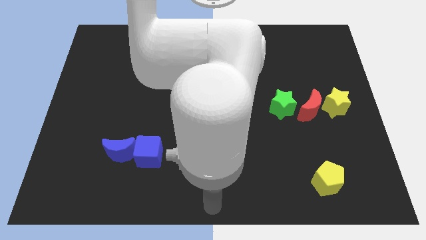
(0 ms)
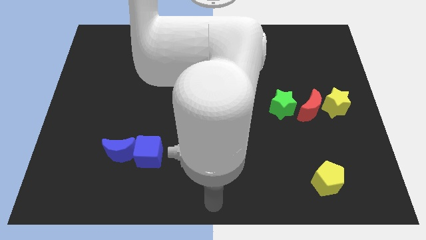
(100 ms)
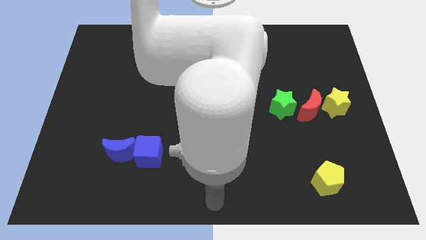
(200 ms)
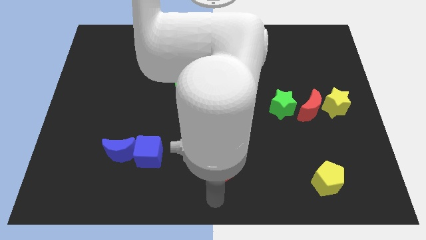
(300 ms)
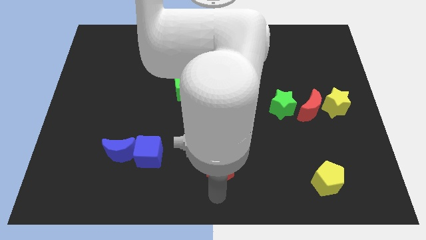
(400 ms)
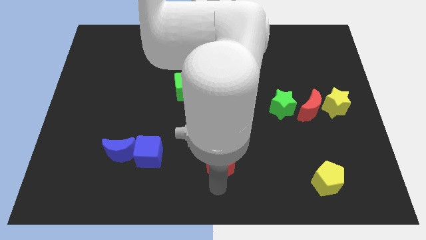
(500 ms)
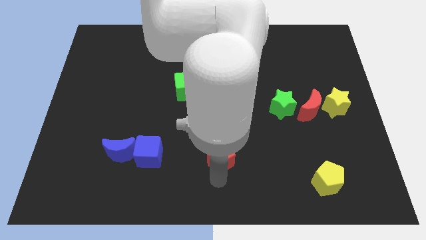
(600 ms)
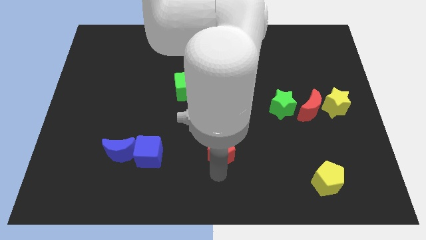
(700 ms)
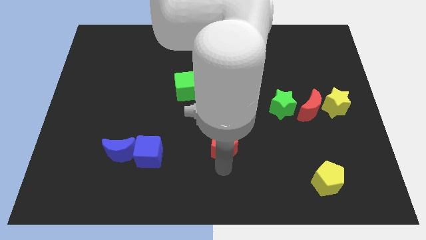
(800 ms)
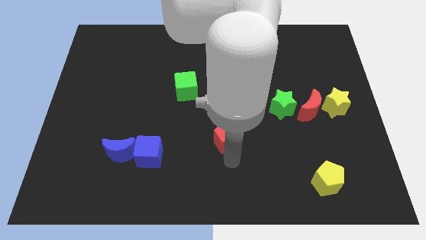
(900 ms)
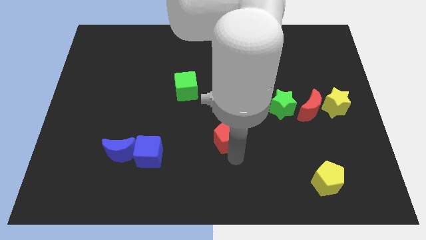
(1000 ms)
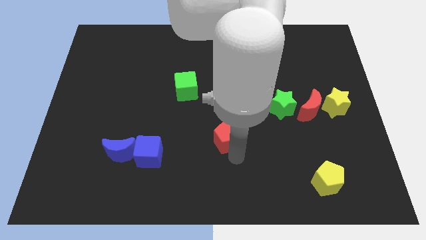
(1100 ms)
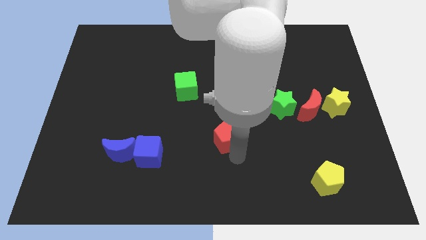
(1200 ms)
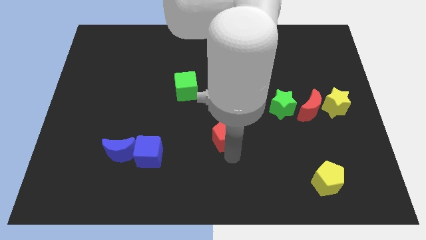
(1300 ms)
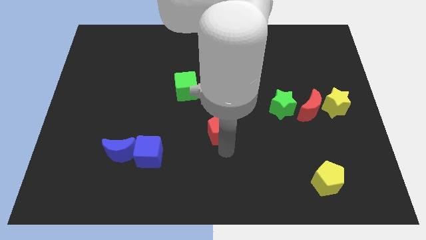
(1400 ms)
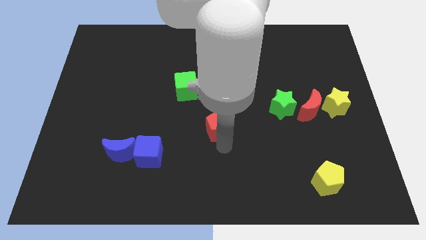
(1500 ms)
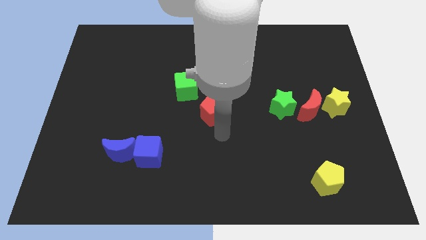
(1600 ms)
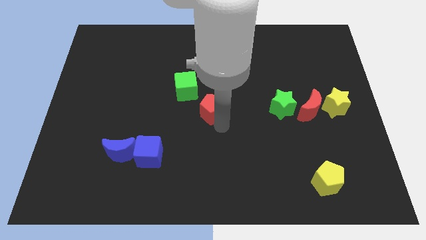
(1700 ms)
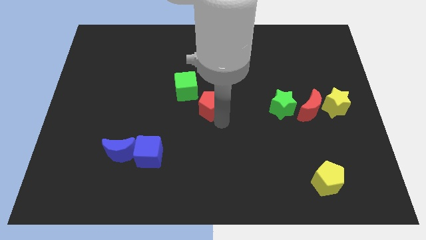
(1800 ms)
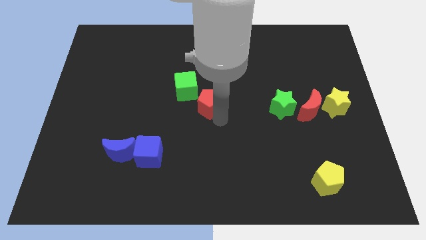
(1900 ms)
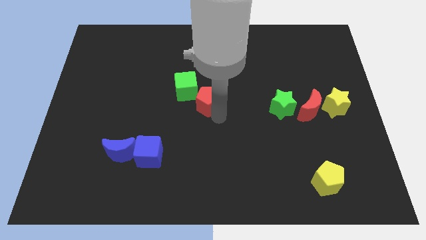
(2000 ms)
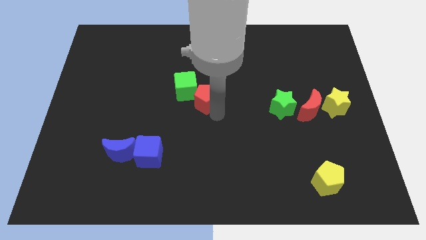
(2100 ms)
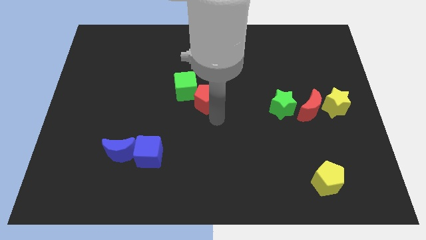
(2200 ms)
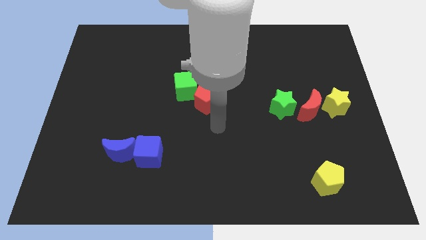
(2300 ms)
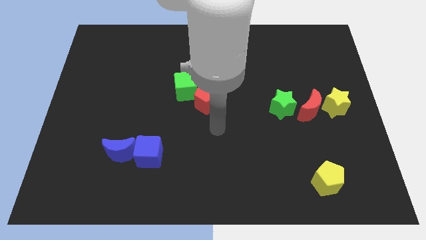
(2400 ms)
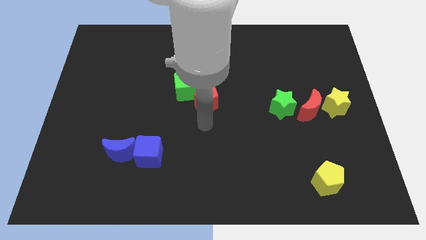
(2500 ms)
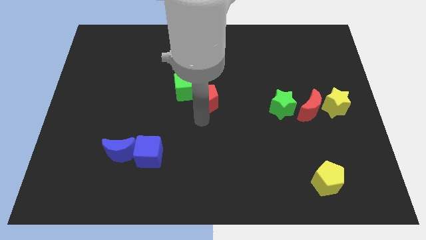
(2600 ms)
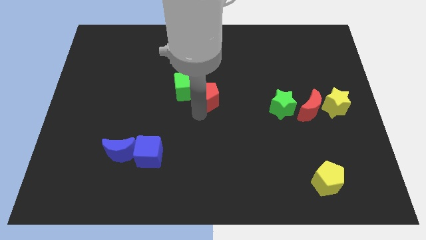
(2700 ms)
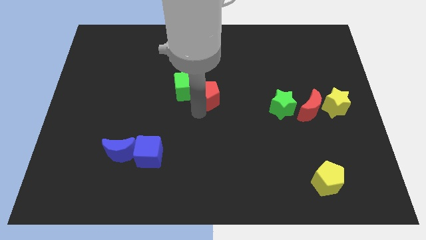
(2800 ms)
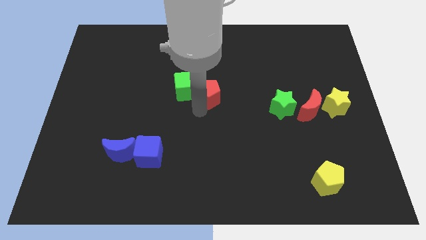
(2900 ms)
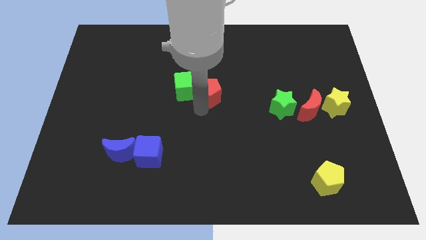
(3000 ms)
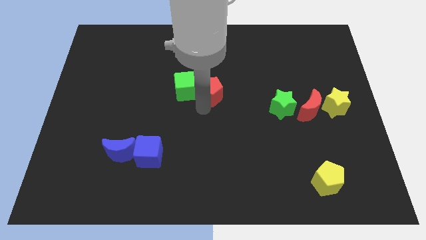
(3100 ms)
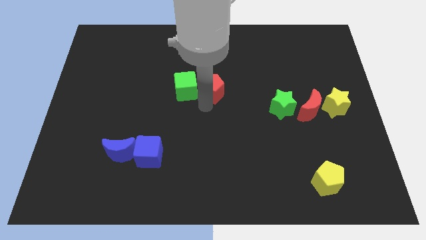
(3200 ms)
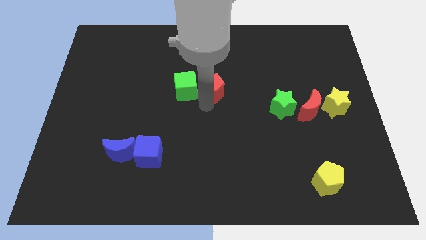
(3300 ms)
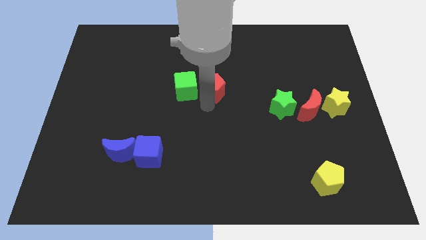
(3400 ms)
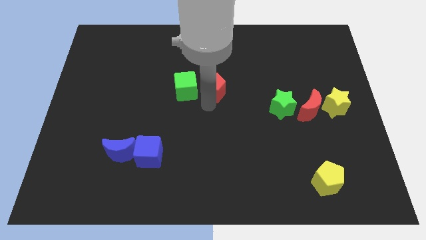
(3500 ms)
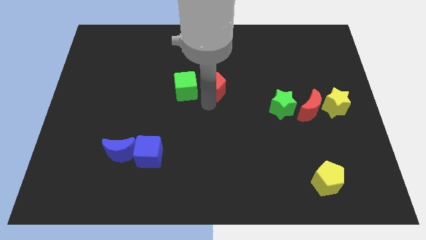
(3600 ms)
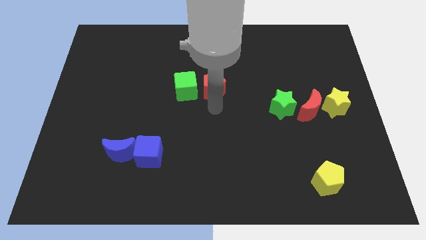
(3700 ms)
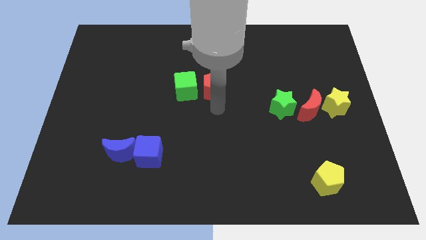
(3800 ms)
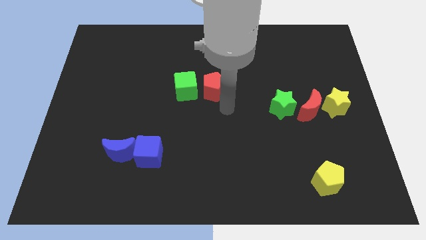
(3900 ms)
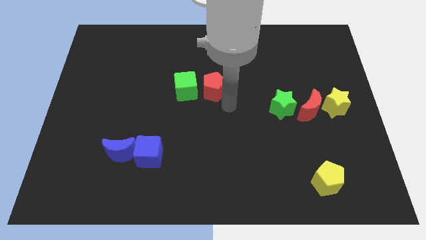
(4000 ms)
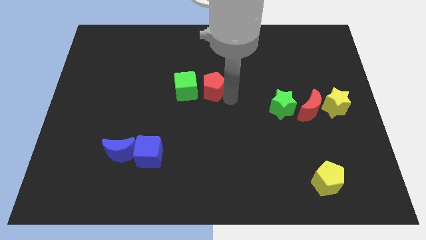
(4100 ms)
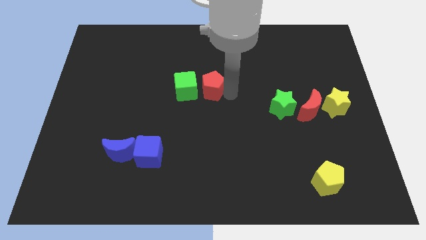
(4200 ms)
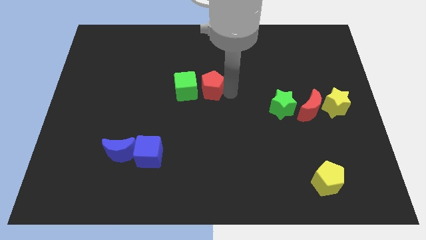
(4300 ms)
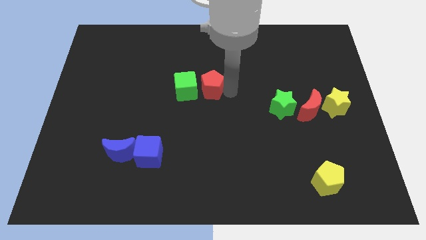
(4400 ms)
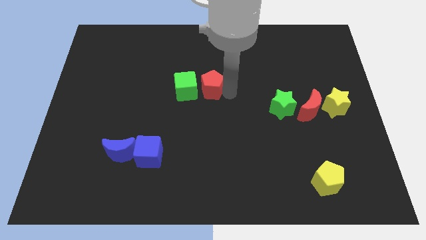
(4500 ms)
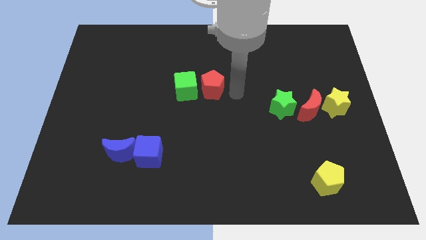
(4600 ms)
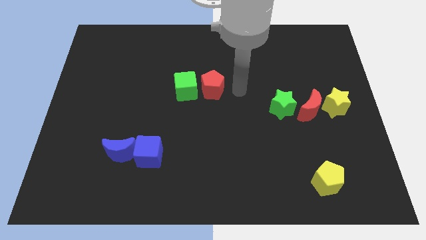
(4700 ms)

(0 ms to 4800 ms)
push the red pentagon right to the green cube

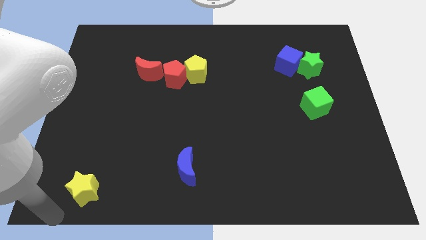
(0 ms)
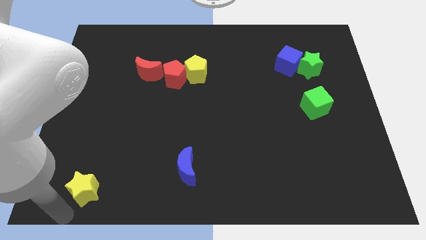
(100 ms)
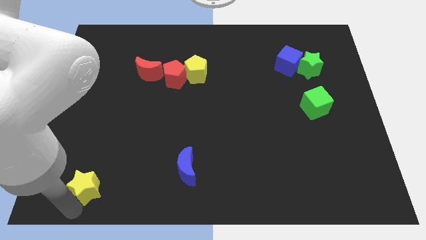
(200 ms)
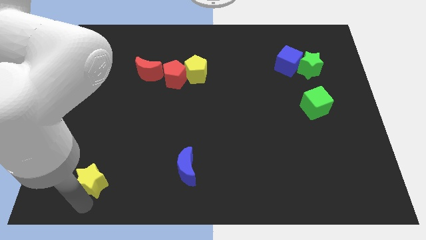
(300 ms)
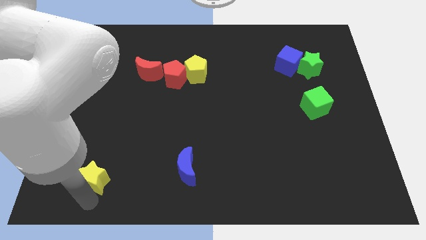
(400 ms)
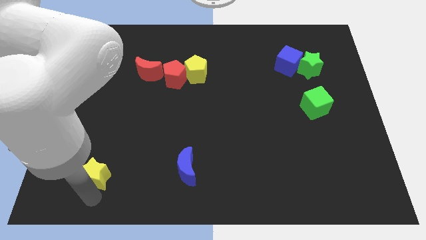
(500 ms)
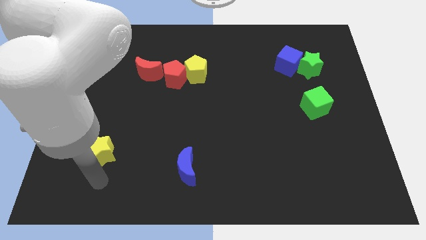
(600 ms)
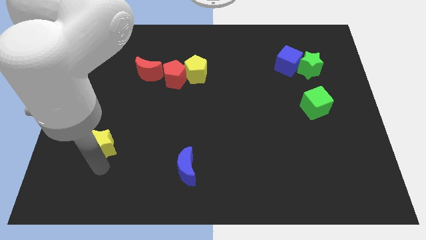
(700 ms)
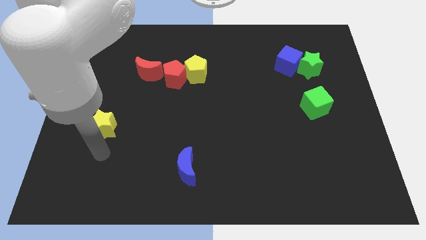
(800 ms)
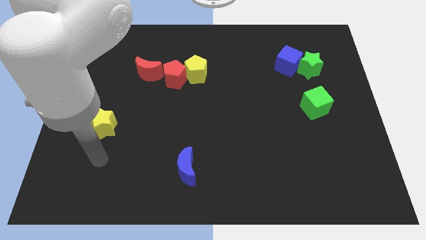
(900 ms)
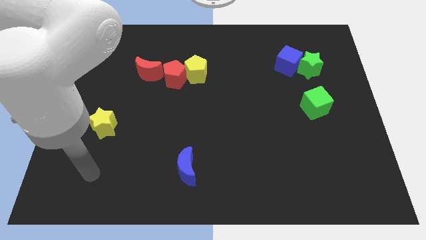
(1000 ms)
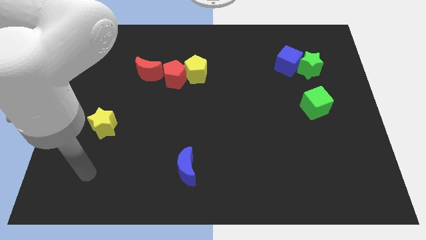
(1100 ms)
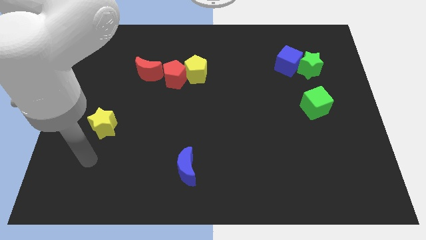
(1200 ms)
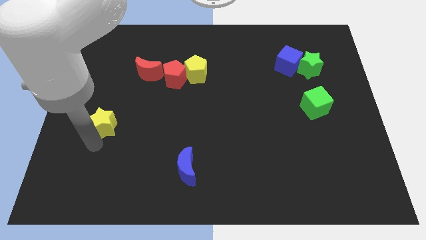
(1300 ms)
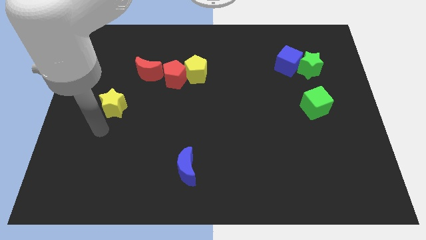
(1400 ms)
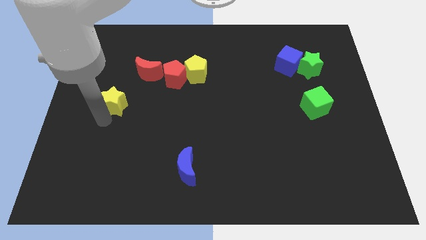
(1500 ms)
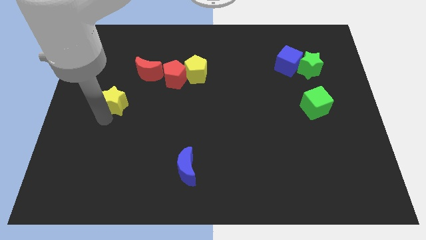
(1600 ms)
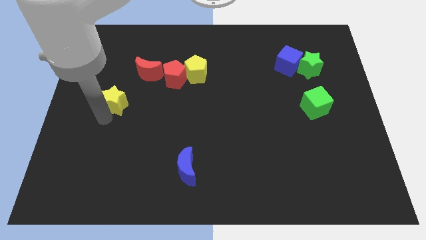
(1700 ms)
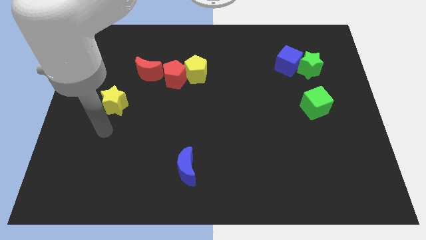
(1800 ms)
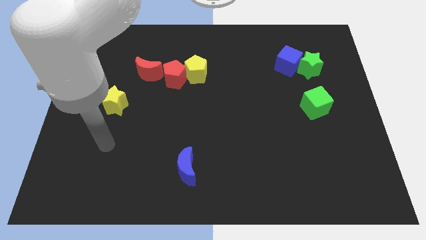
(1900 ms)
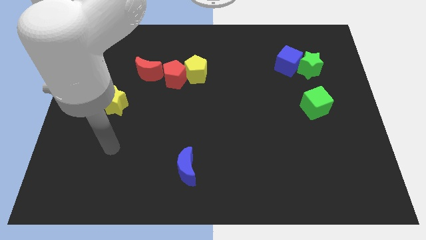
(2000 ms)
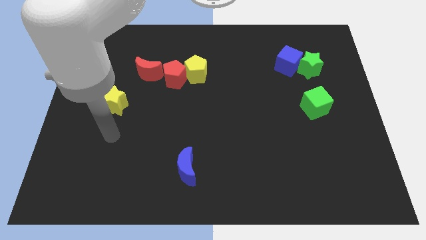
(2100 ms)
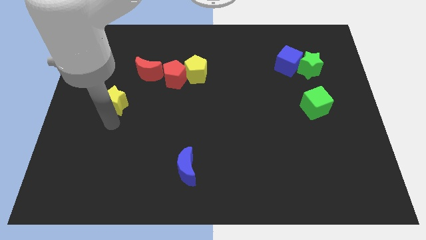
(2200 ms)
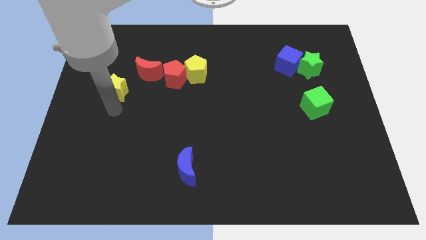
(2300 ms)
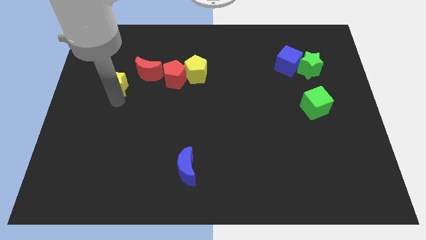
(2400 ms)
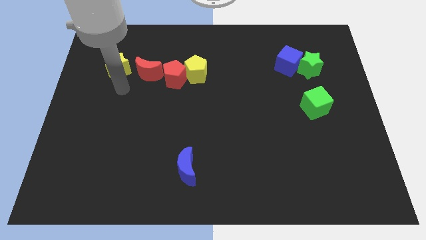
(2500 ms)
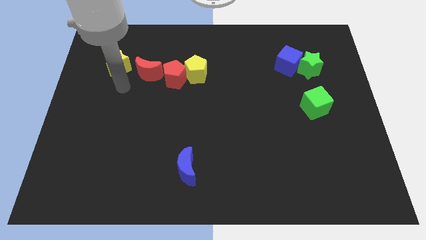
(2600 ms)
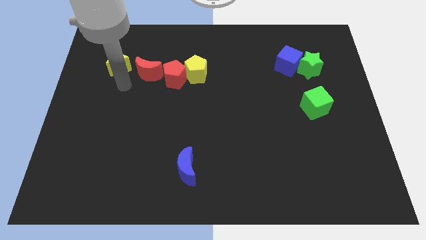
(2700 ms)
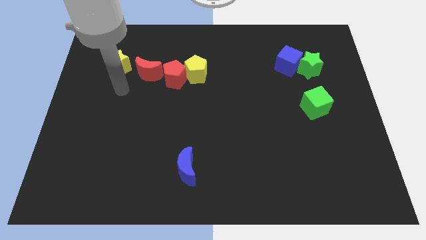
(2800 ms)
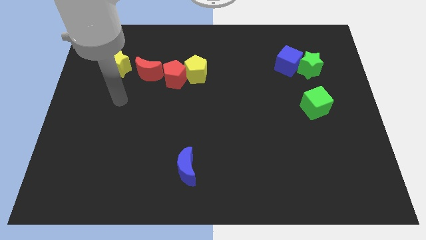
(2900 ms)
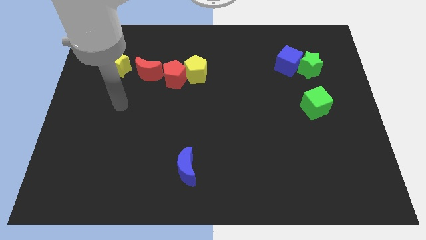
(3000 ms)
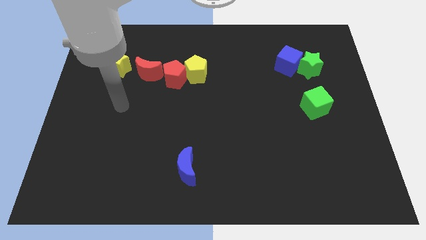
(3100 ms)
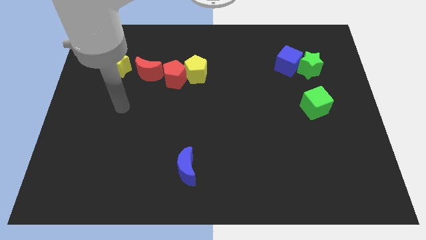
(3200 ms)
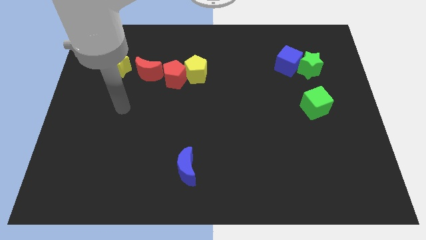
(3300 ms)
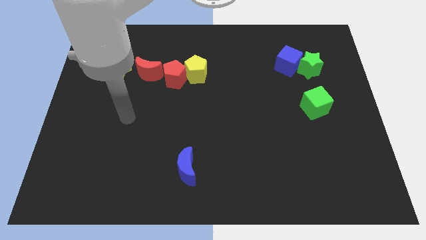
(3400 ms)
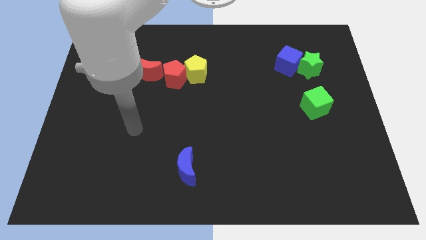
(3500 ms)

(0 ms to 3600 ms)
put the yellow star parallel left to the red moon

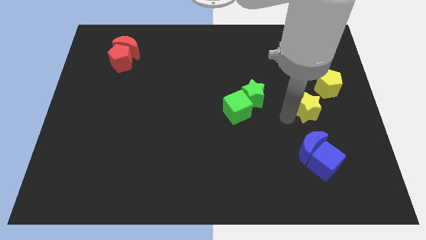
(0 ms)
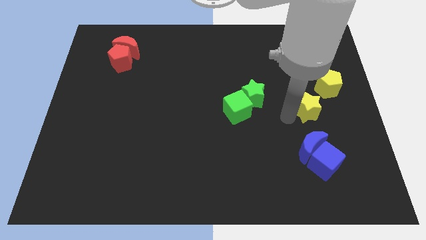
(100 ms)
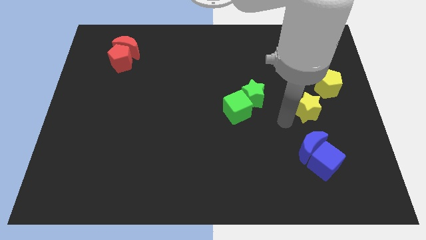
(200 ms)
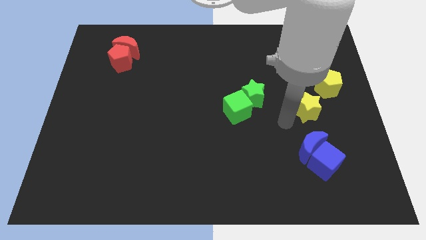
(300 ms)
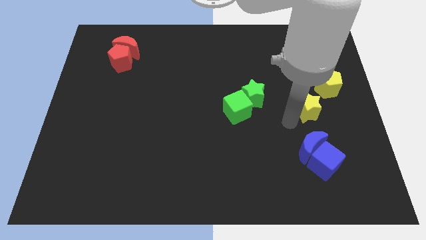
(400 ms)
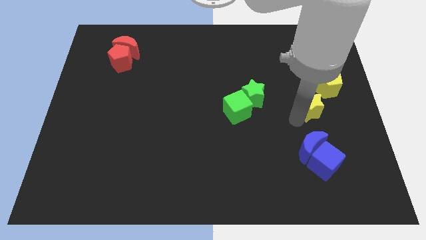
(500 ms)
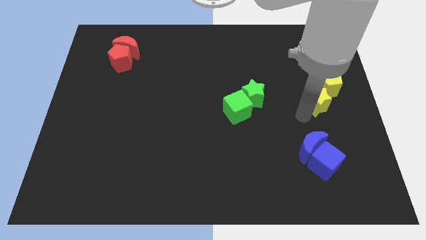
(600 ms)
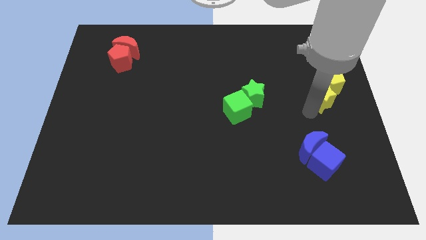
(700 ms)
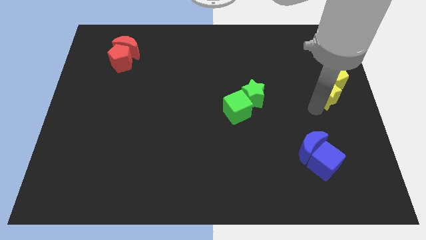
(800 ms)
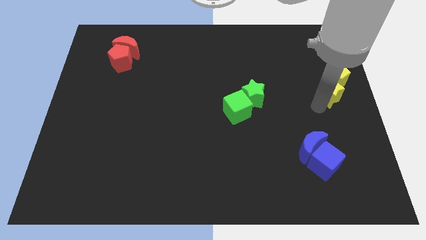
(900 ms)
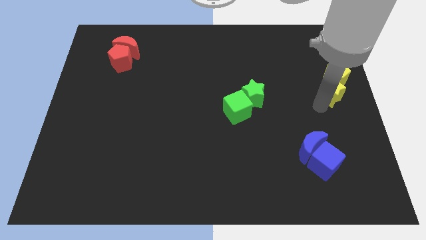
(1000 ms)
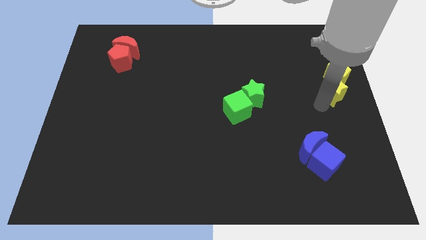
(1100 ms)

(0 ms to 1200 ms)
push the yellow star into the yellow pentagon
